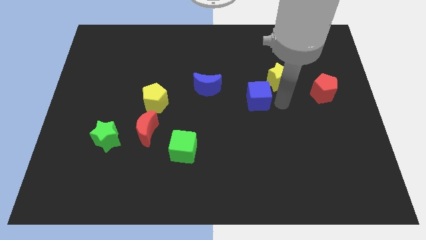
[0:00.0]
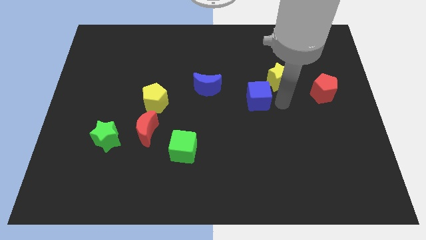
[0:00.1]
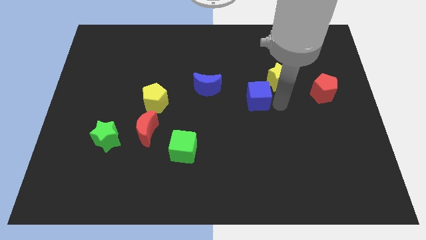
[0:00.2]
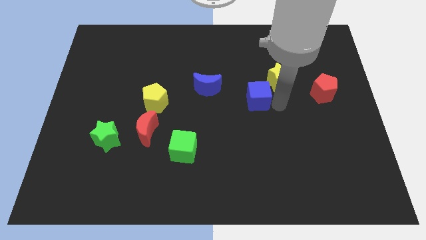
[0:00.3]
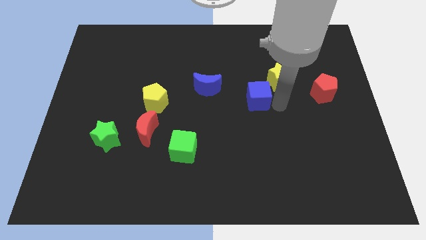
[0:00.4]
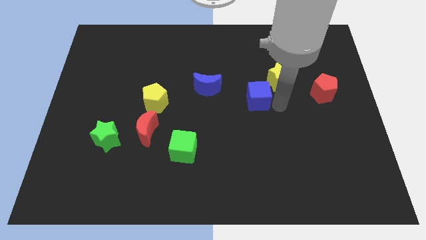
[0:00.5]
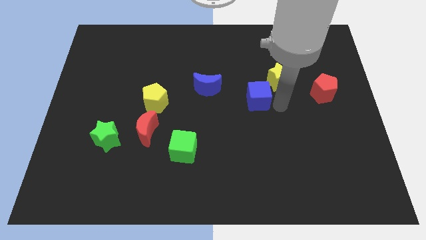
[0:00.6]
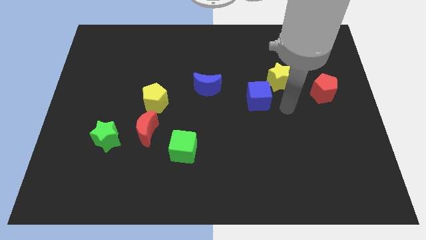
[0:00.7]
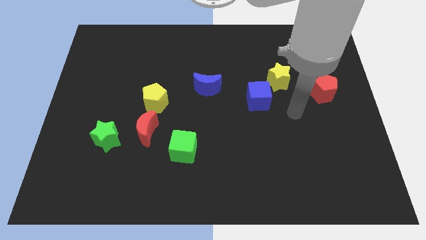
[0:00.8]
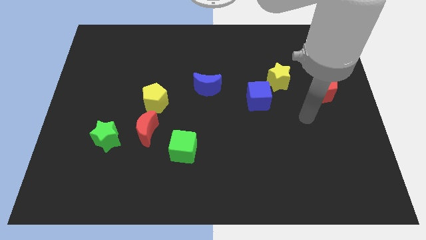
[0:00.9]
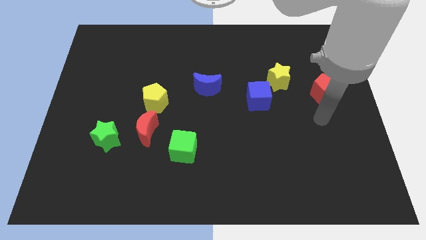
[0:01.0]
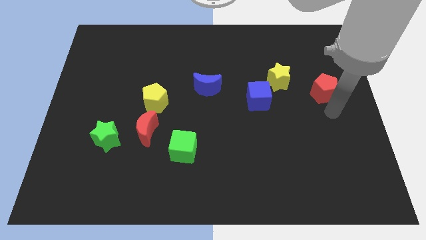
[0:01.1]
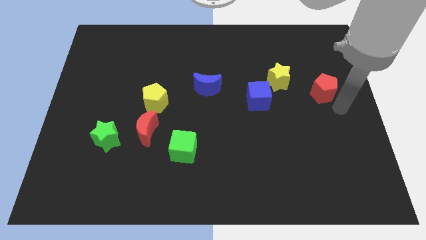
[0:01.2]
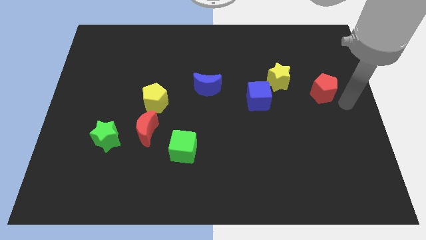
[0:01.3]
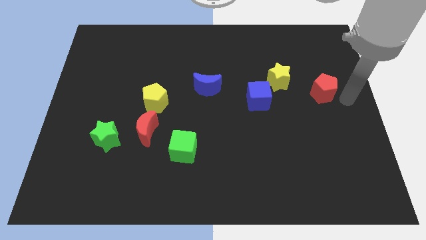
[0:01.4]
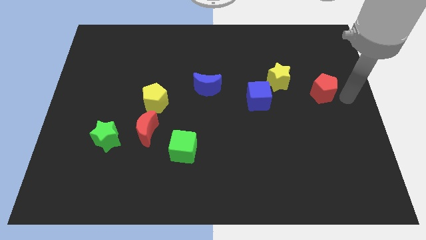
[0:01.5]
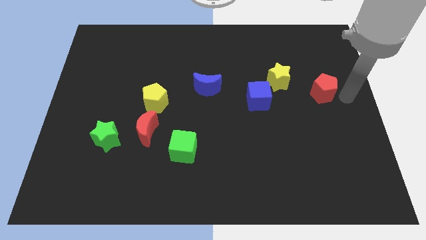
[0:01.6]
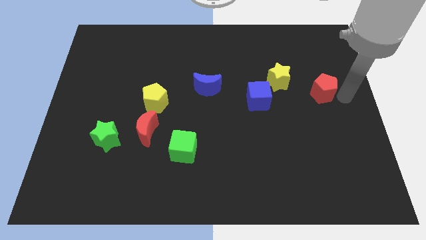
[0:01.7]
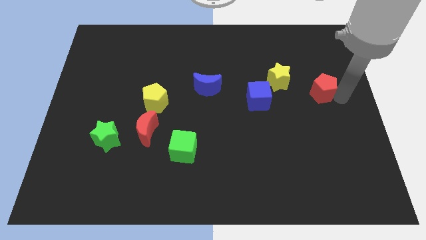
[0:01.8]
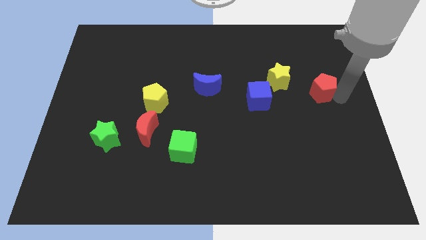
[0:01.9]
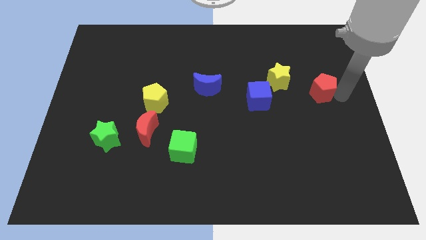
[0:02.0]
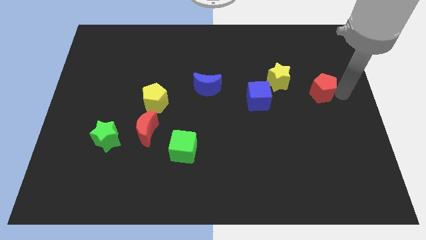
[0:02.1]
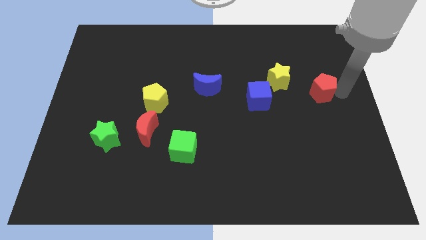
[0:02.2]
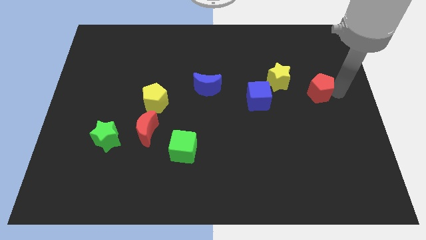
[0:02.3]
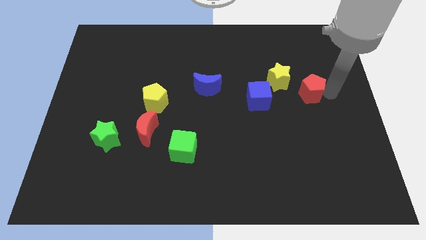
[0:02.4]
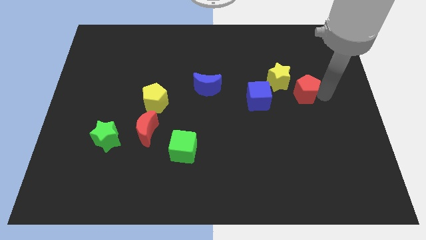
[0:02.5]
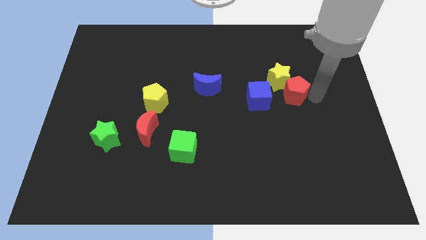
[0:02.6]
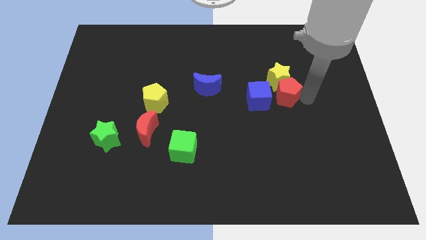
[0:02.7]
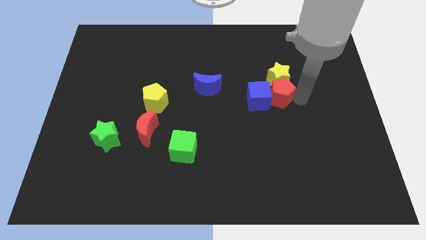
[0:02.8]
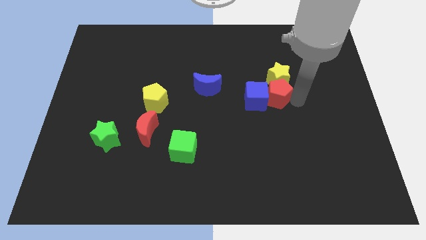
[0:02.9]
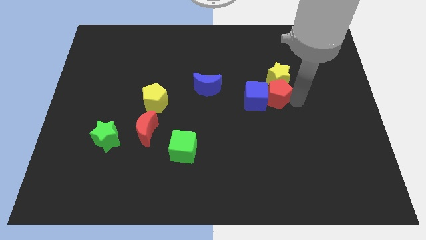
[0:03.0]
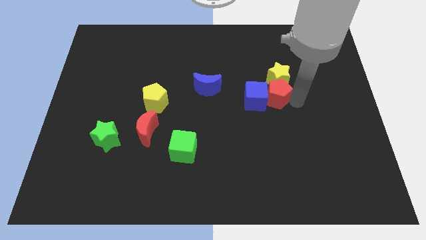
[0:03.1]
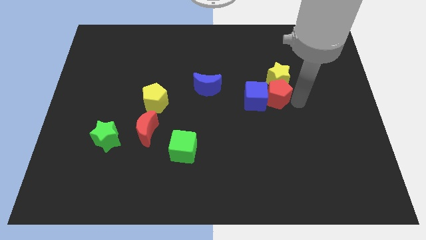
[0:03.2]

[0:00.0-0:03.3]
push the red pentagon into the blue cube

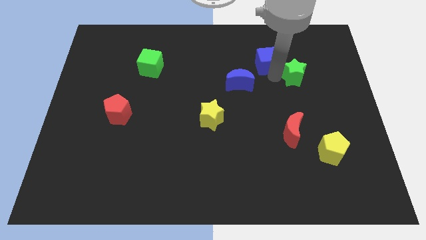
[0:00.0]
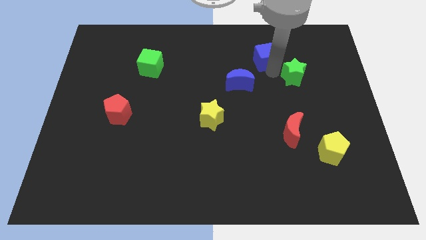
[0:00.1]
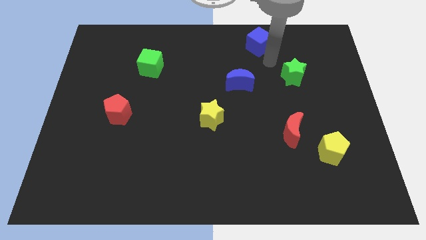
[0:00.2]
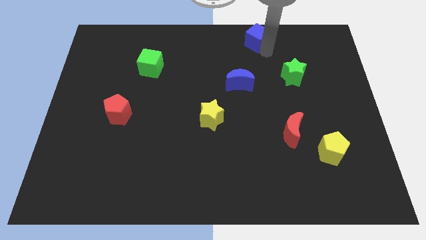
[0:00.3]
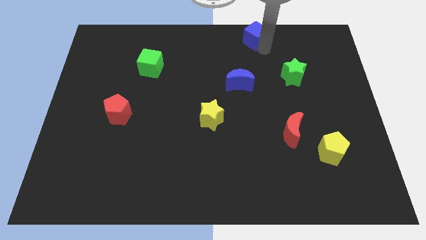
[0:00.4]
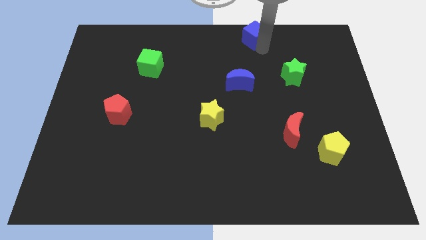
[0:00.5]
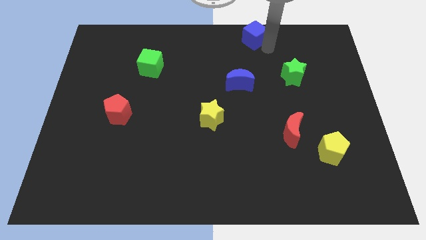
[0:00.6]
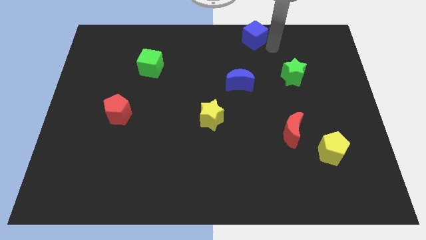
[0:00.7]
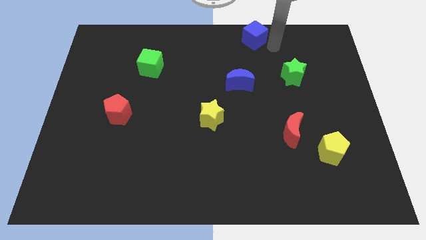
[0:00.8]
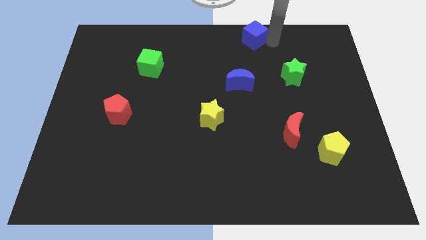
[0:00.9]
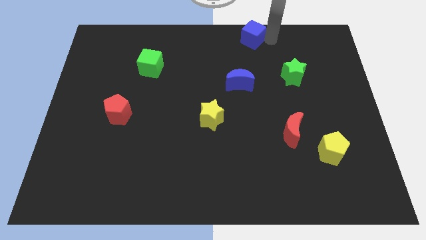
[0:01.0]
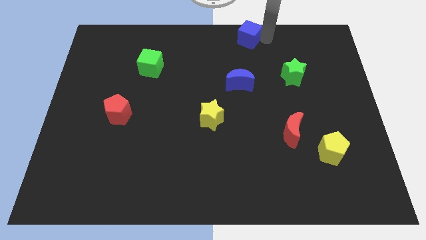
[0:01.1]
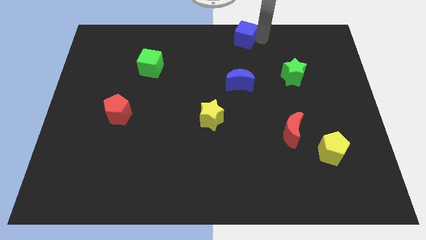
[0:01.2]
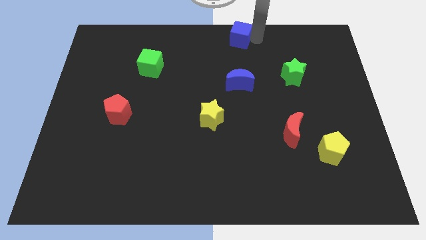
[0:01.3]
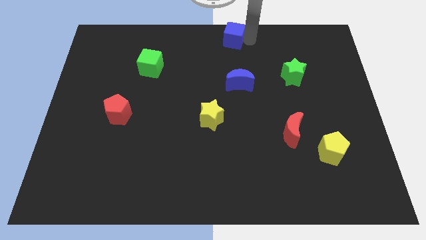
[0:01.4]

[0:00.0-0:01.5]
place the blue cube vertically above the blue crescent

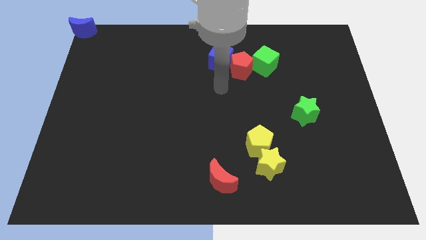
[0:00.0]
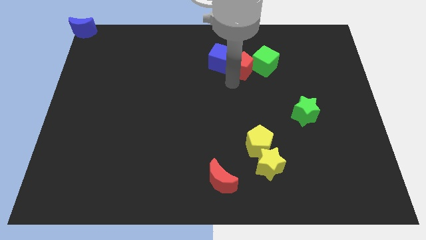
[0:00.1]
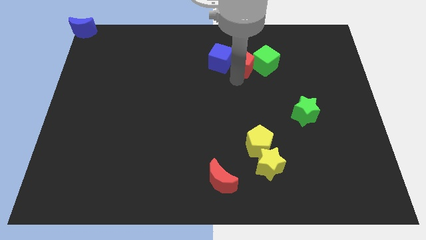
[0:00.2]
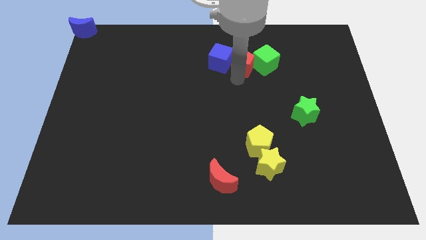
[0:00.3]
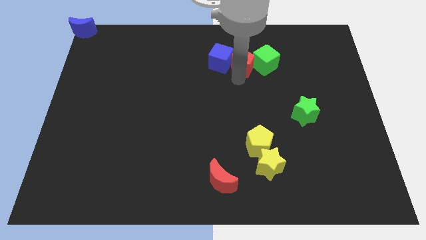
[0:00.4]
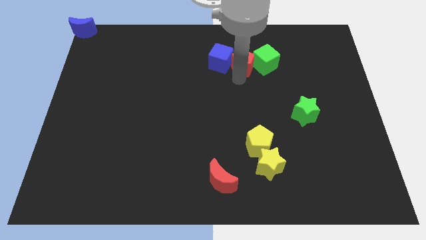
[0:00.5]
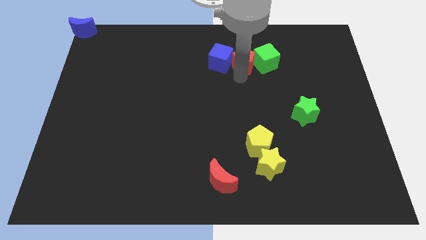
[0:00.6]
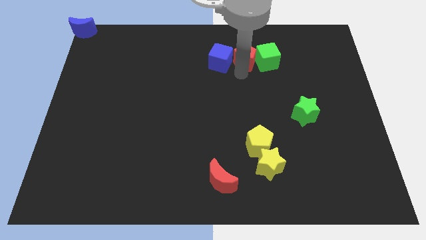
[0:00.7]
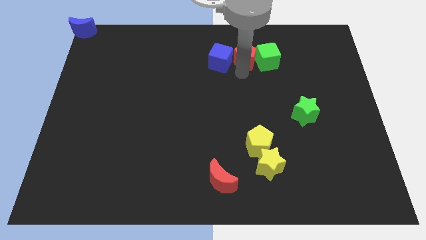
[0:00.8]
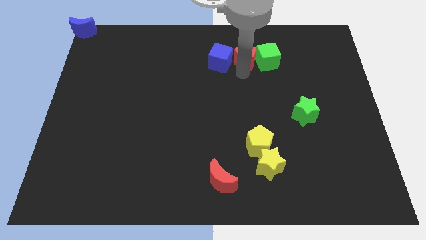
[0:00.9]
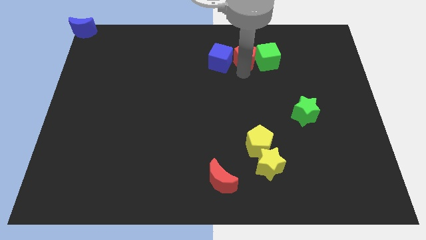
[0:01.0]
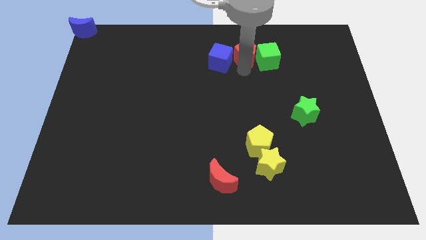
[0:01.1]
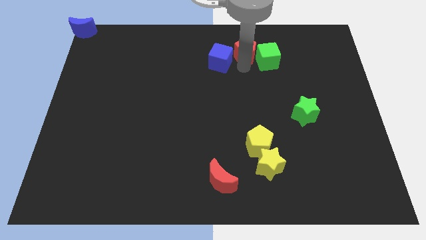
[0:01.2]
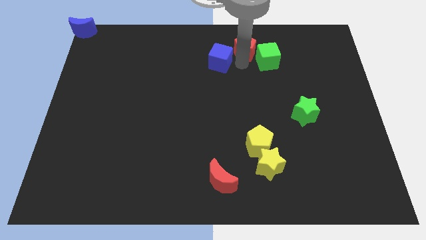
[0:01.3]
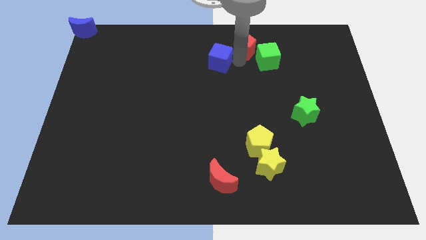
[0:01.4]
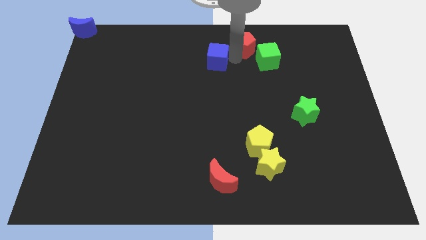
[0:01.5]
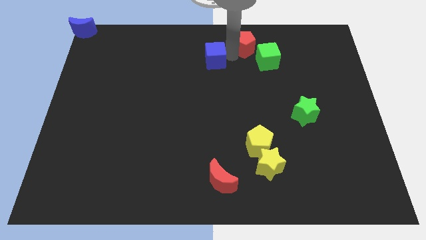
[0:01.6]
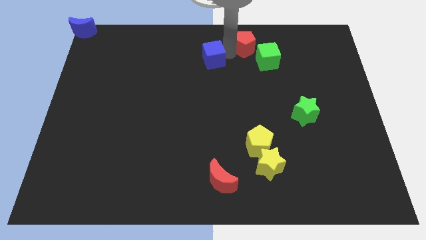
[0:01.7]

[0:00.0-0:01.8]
move the red pentagon to the left top of the green cube

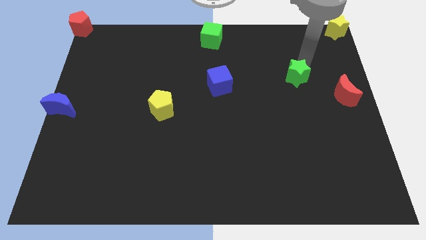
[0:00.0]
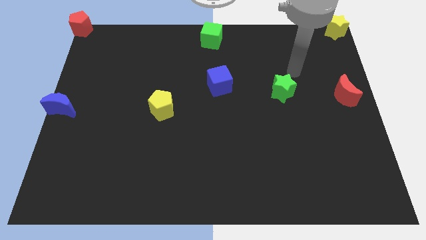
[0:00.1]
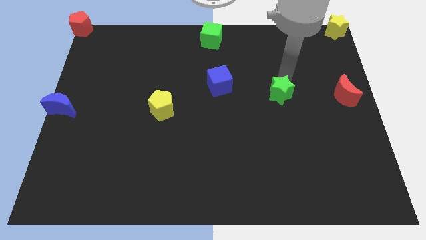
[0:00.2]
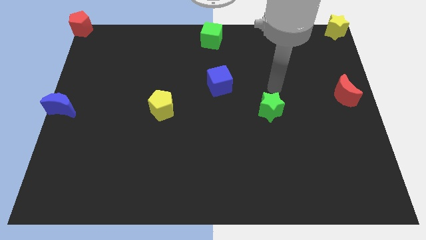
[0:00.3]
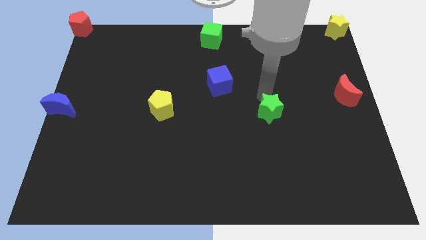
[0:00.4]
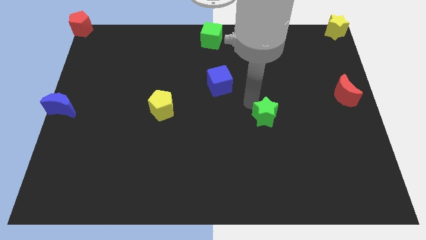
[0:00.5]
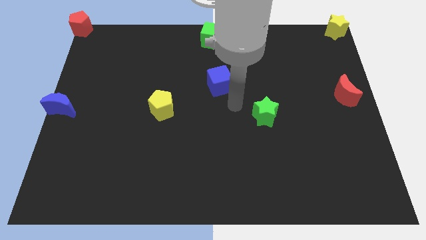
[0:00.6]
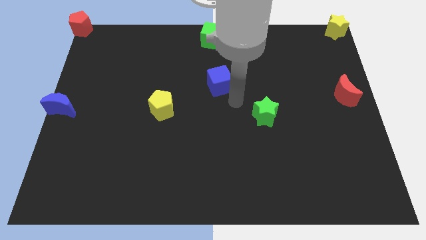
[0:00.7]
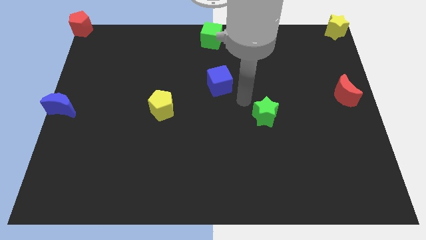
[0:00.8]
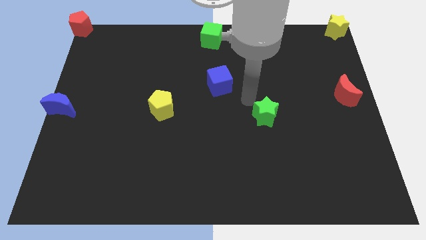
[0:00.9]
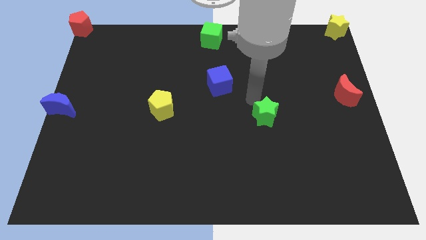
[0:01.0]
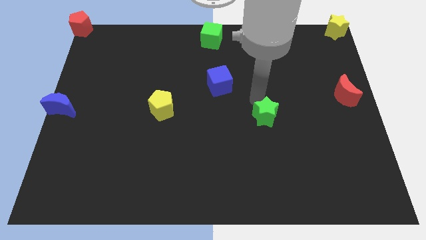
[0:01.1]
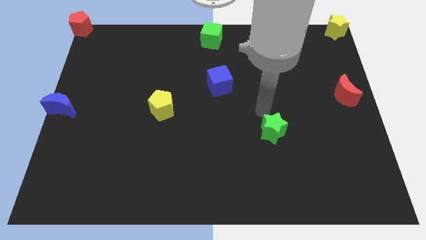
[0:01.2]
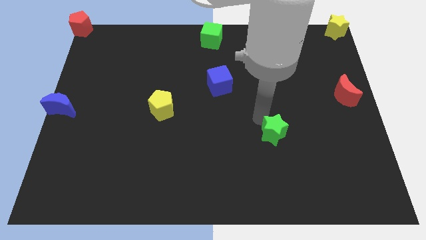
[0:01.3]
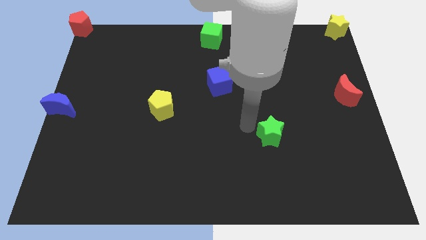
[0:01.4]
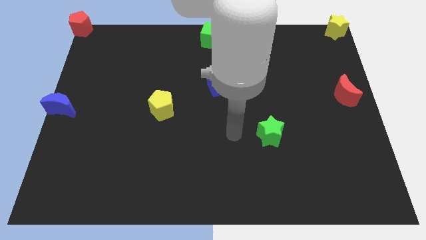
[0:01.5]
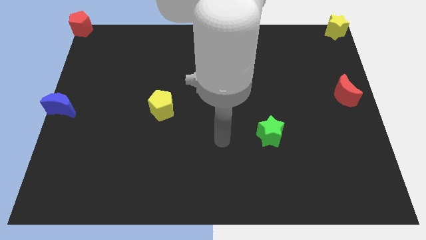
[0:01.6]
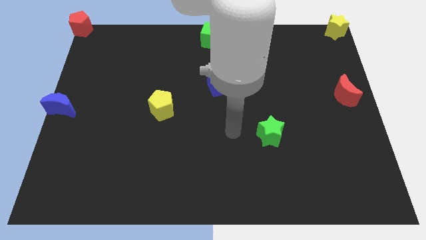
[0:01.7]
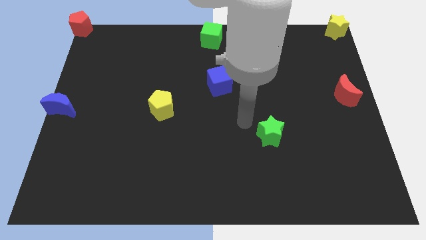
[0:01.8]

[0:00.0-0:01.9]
pull the green star slightly downwards

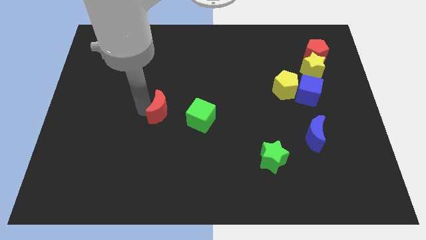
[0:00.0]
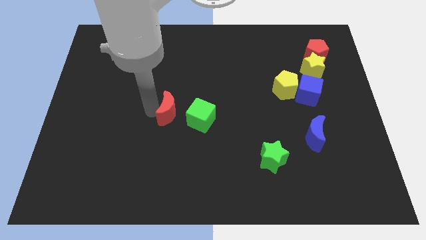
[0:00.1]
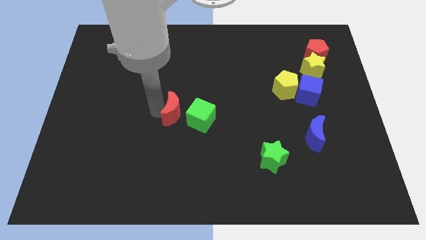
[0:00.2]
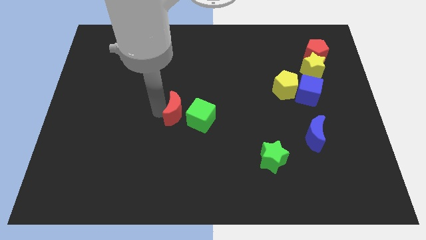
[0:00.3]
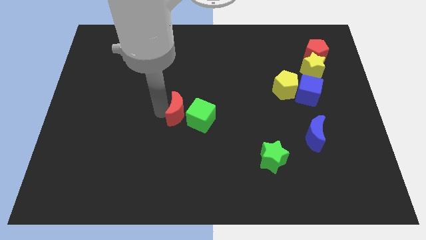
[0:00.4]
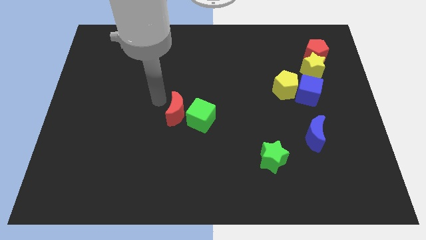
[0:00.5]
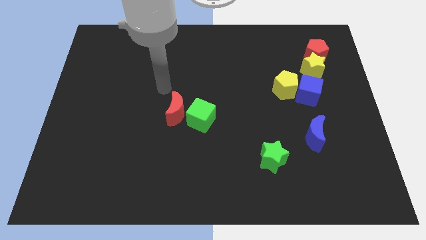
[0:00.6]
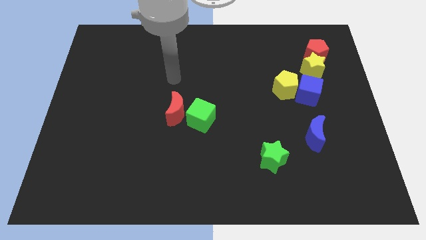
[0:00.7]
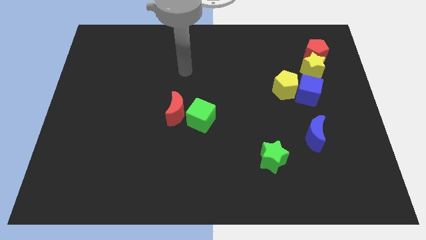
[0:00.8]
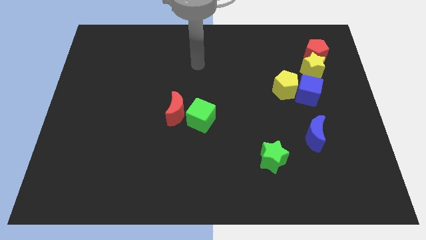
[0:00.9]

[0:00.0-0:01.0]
push the red crescent close to the green cube
